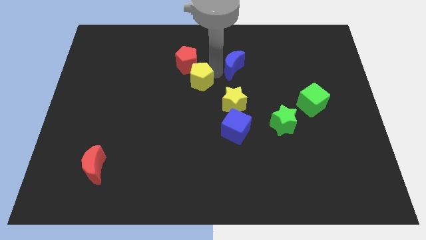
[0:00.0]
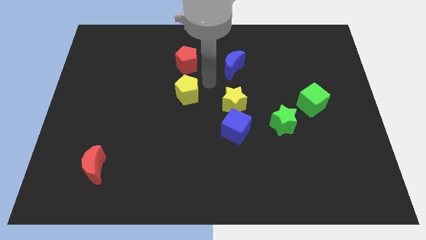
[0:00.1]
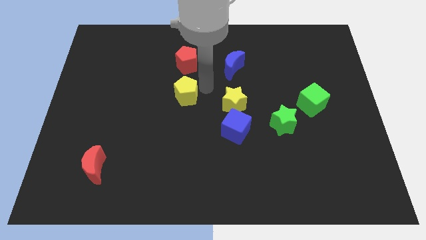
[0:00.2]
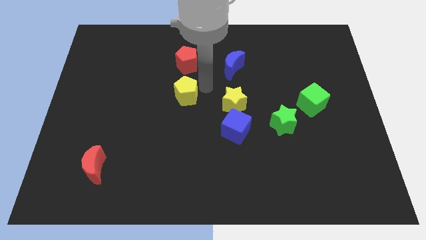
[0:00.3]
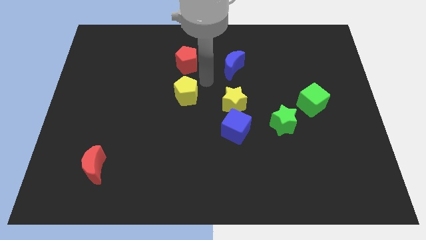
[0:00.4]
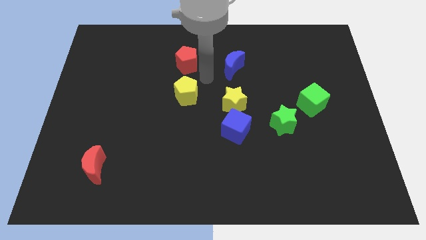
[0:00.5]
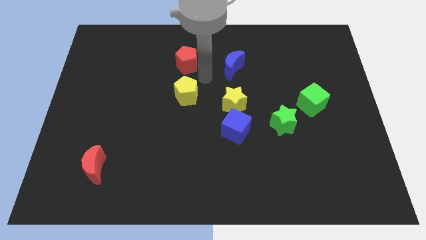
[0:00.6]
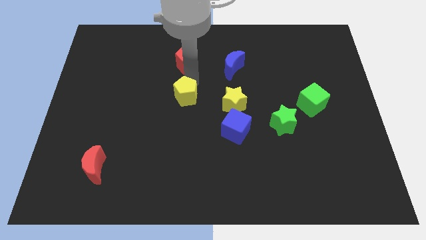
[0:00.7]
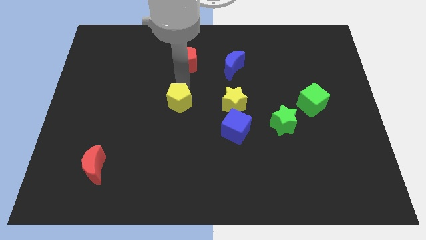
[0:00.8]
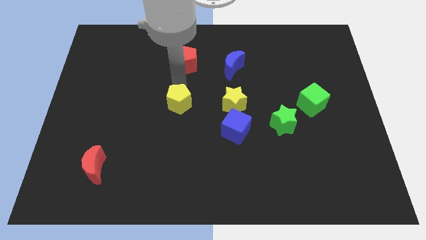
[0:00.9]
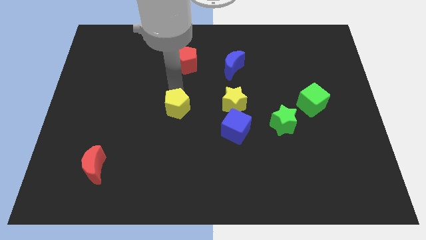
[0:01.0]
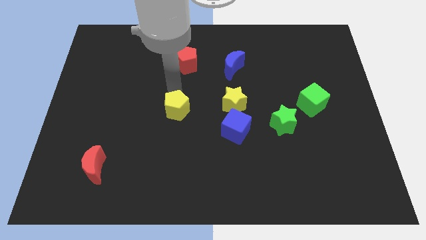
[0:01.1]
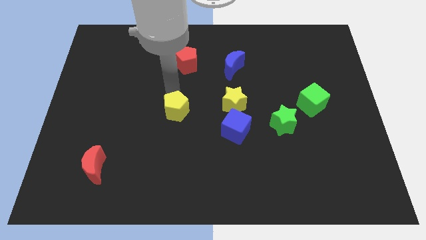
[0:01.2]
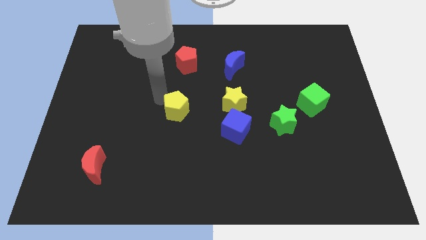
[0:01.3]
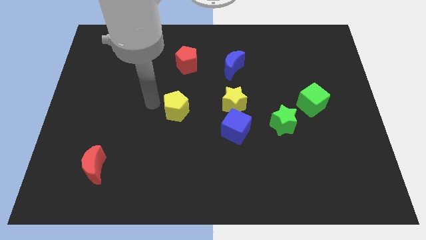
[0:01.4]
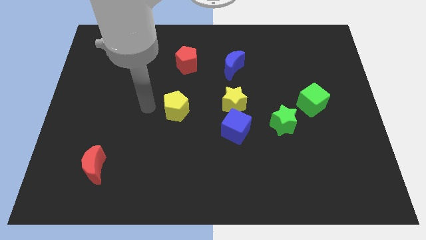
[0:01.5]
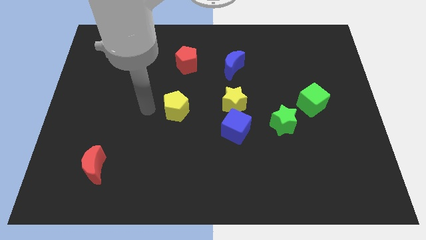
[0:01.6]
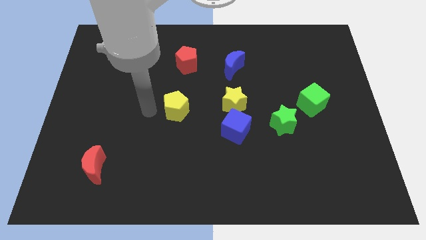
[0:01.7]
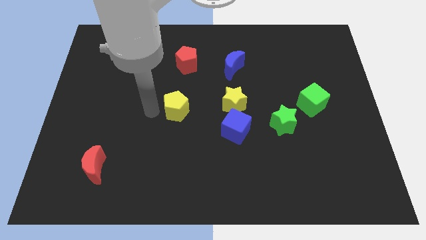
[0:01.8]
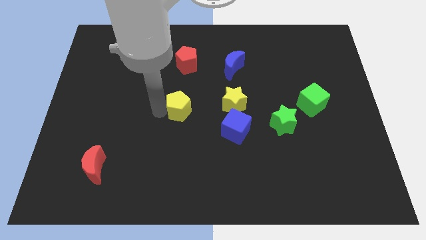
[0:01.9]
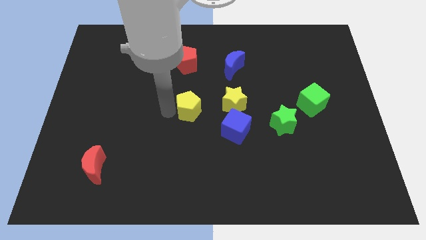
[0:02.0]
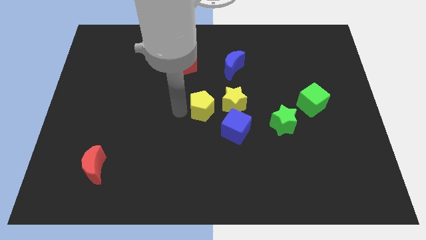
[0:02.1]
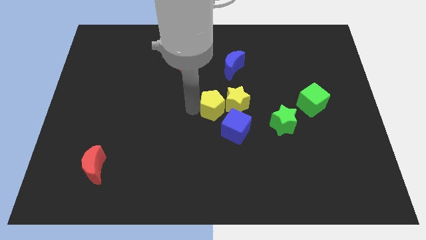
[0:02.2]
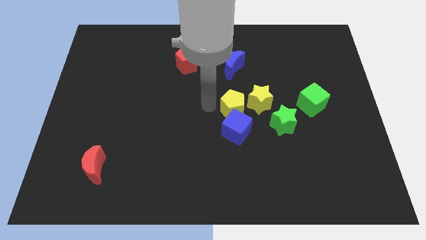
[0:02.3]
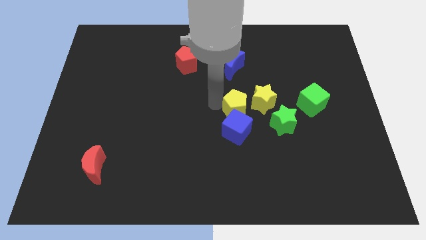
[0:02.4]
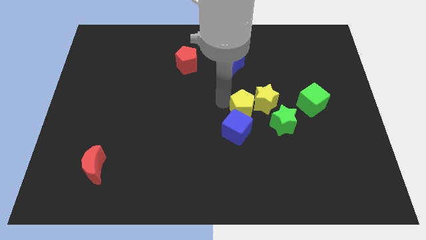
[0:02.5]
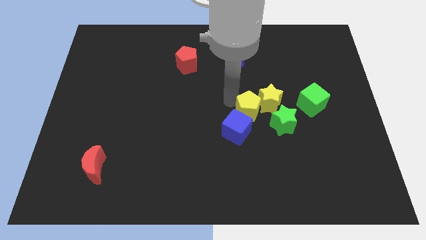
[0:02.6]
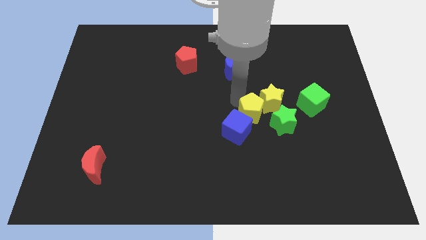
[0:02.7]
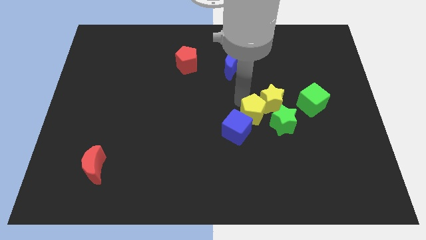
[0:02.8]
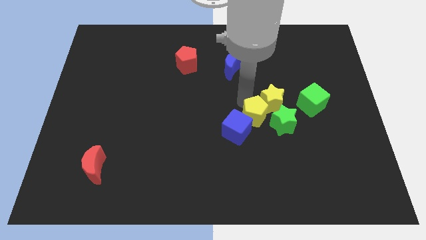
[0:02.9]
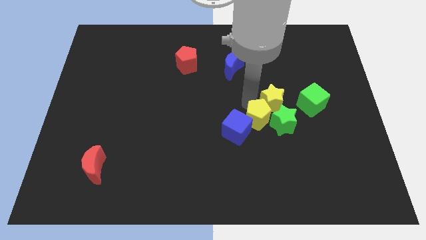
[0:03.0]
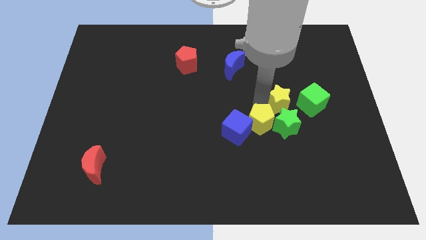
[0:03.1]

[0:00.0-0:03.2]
push the yellow pentagon into the yellow star

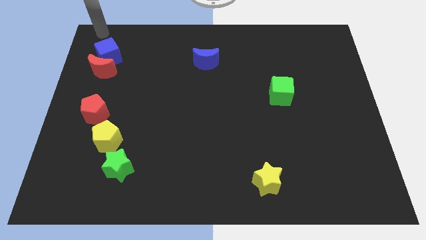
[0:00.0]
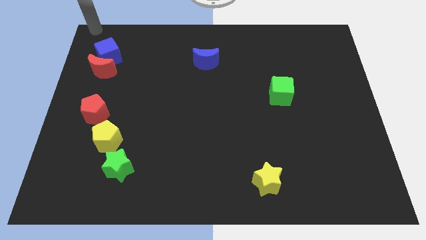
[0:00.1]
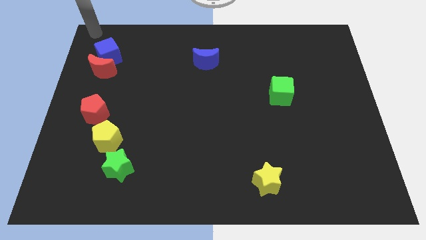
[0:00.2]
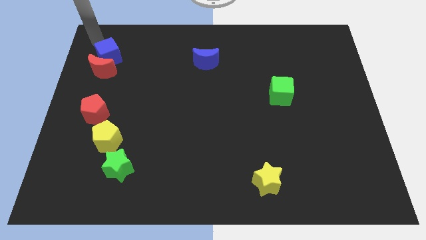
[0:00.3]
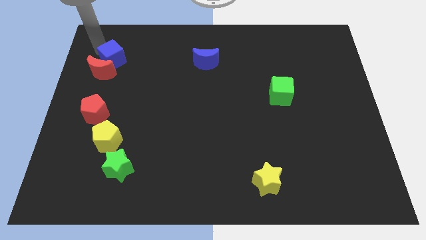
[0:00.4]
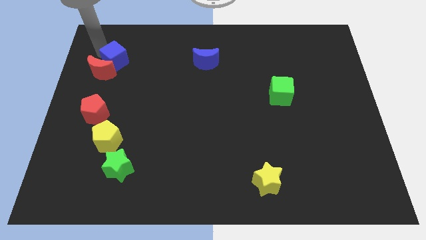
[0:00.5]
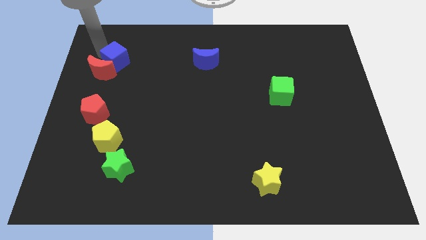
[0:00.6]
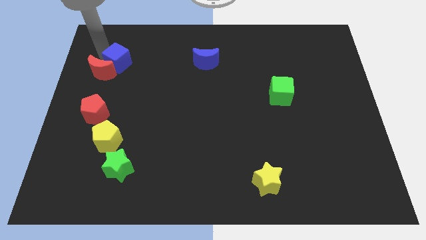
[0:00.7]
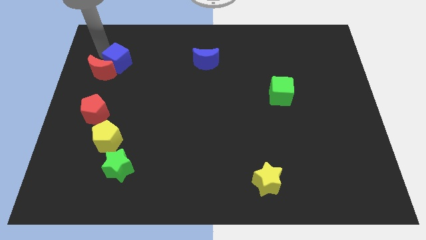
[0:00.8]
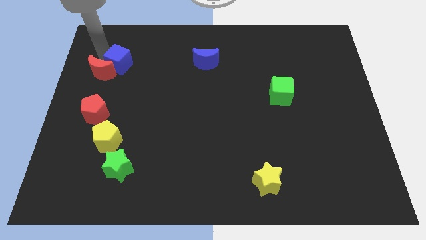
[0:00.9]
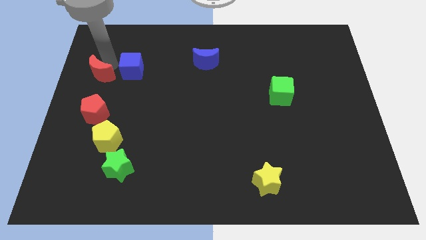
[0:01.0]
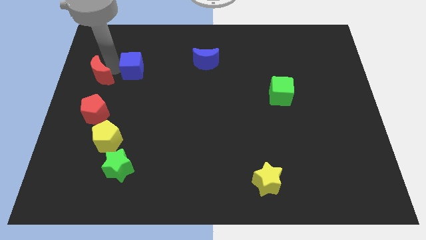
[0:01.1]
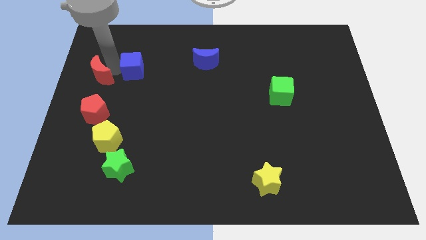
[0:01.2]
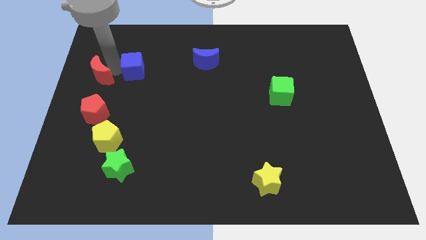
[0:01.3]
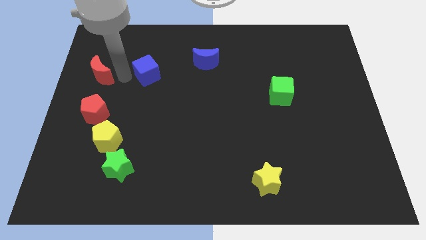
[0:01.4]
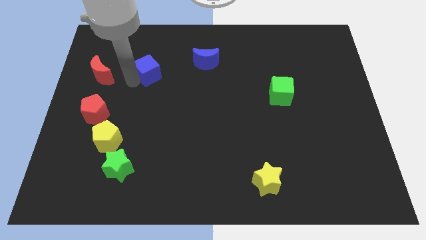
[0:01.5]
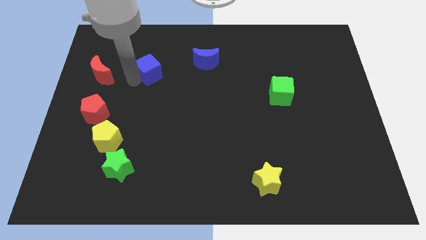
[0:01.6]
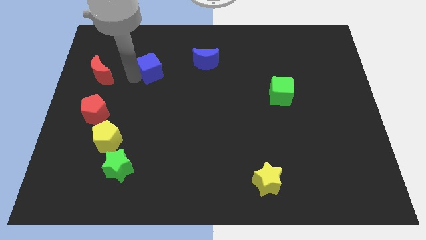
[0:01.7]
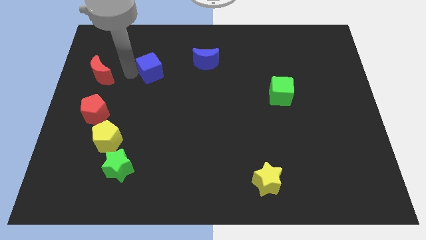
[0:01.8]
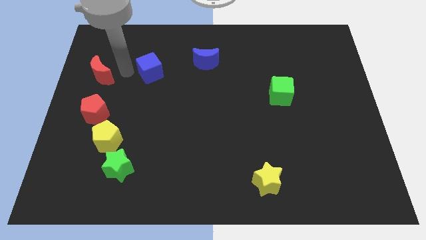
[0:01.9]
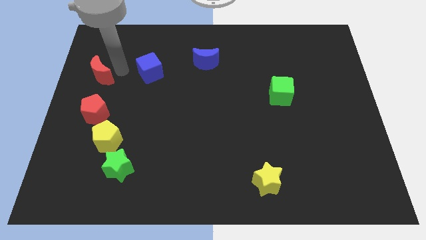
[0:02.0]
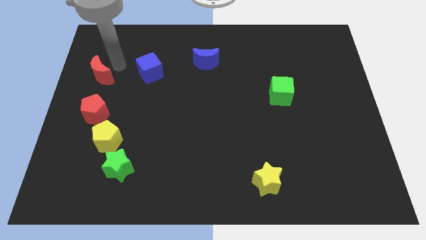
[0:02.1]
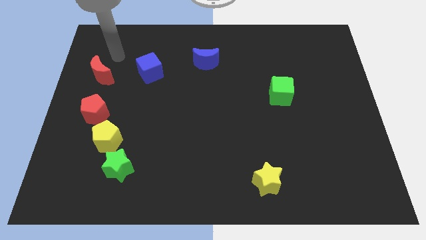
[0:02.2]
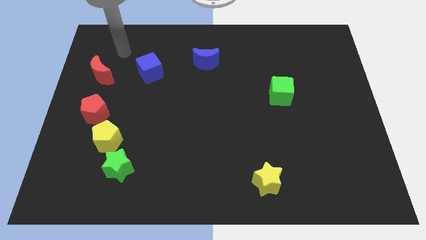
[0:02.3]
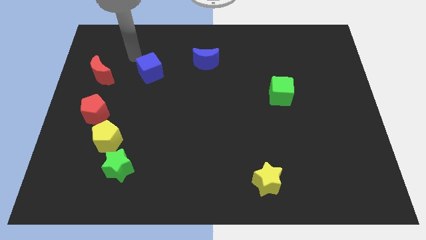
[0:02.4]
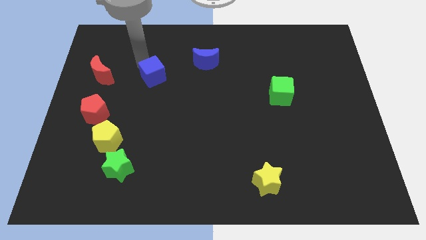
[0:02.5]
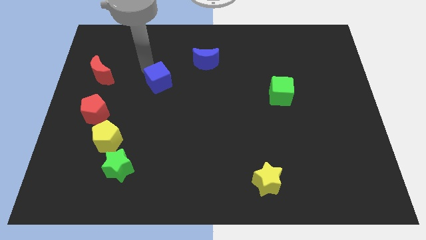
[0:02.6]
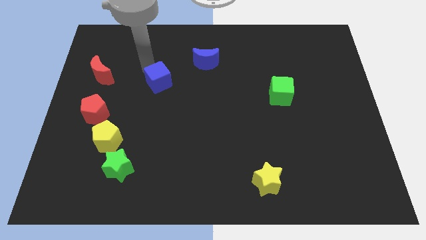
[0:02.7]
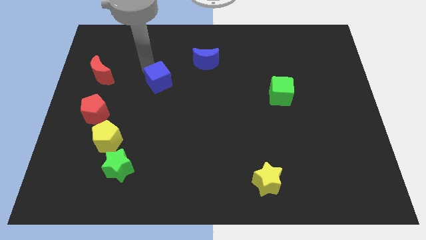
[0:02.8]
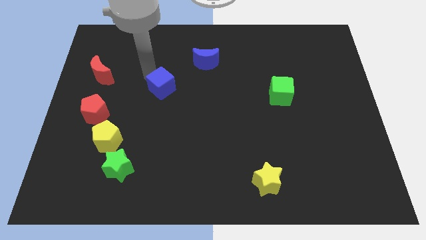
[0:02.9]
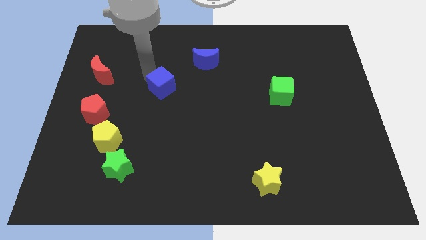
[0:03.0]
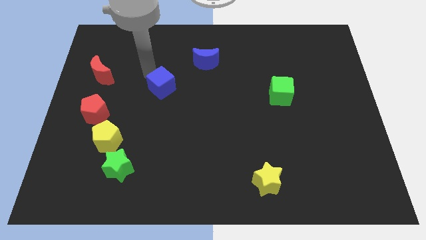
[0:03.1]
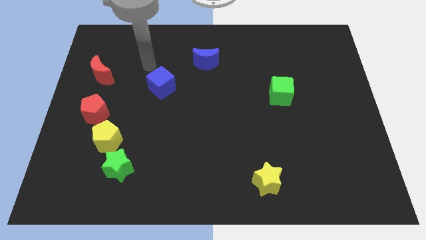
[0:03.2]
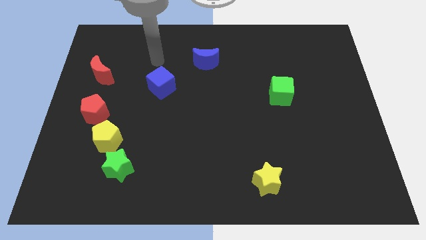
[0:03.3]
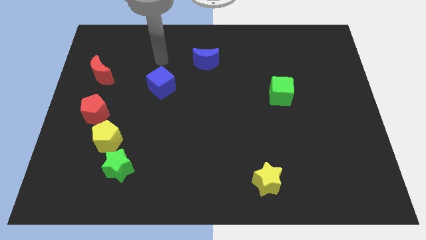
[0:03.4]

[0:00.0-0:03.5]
move the blue cube to the center

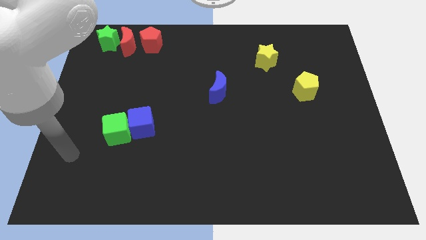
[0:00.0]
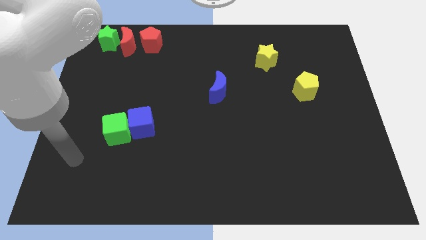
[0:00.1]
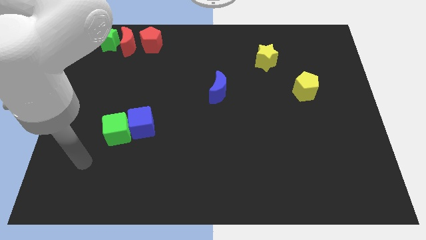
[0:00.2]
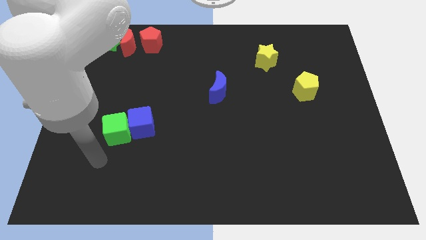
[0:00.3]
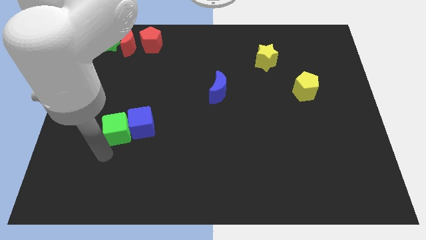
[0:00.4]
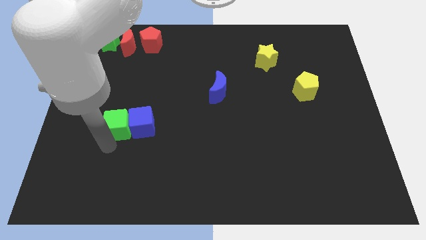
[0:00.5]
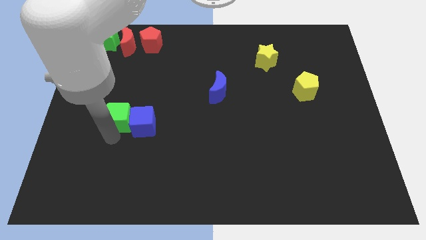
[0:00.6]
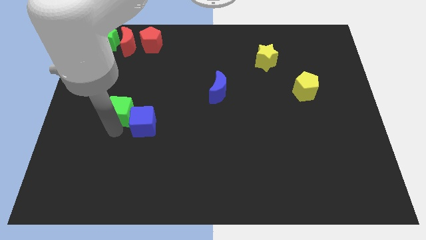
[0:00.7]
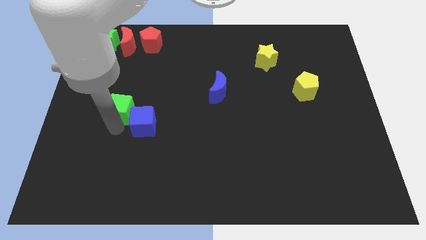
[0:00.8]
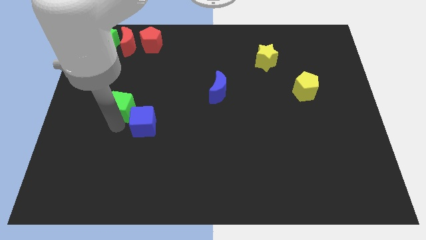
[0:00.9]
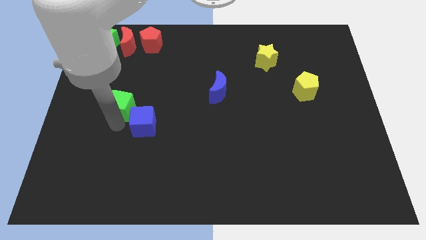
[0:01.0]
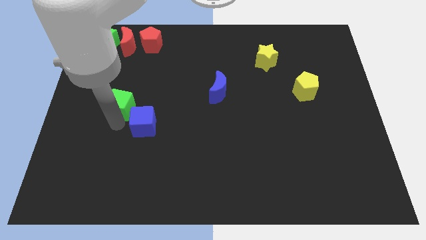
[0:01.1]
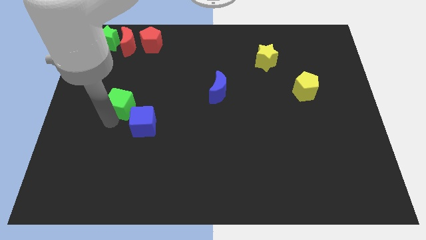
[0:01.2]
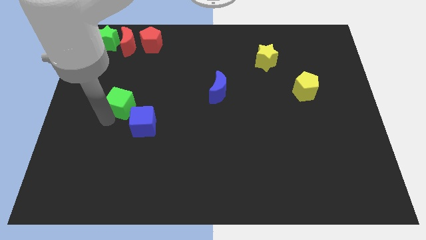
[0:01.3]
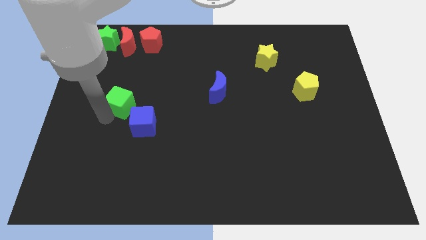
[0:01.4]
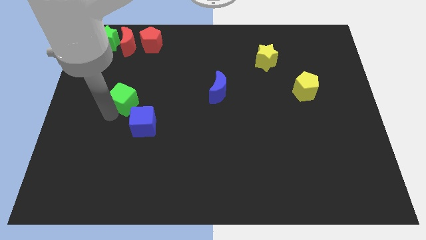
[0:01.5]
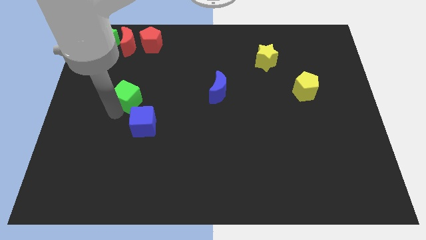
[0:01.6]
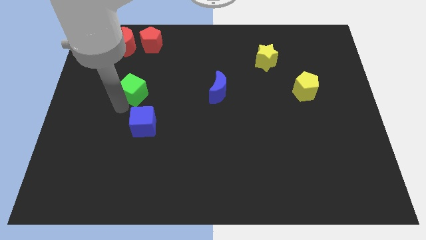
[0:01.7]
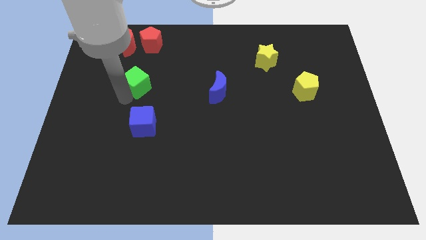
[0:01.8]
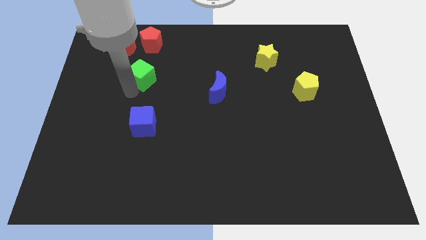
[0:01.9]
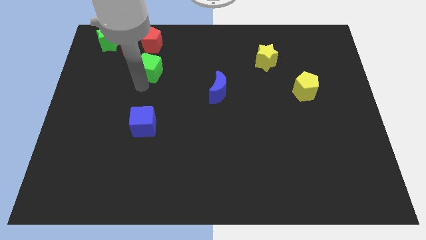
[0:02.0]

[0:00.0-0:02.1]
push the green cube towards the red pentagon

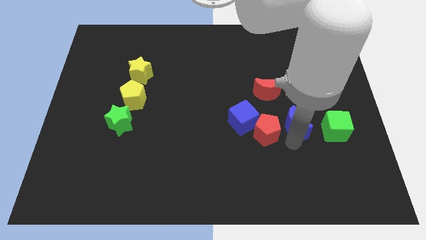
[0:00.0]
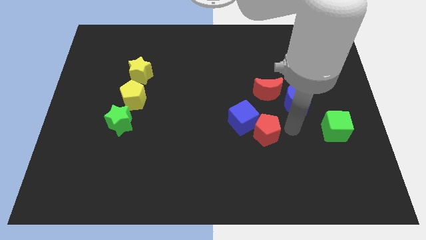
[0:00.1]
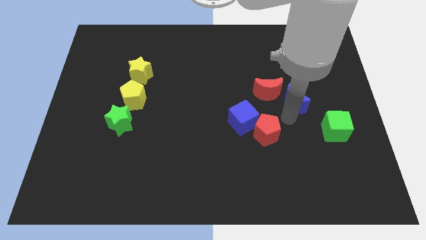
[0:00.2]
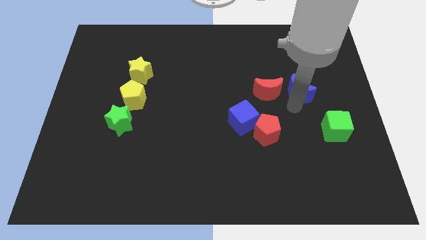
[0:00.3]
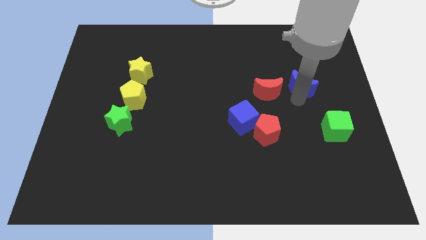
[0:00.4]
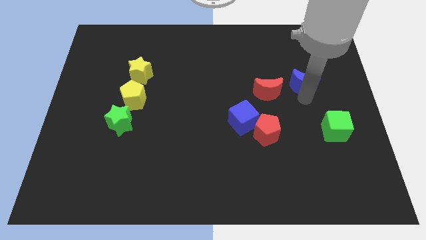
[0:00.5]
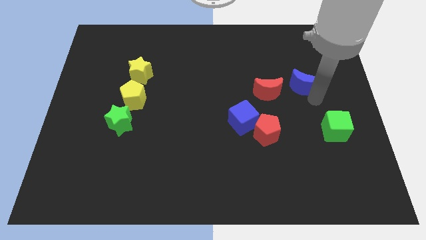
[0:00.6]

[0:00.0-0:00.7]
push the blue moon to the right of the red moon
